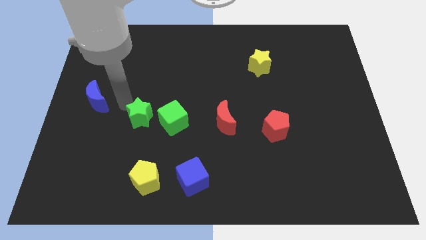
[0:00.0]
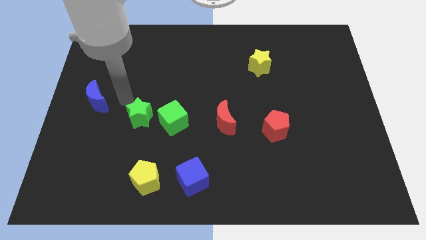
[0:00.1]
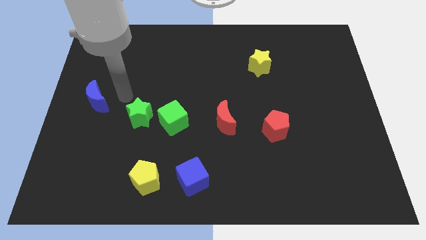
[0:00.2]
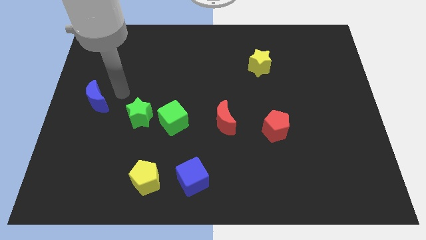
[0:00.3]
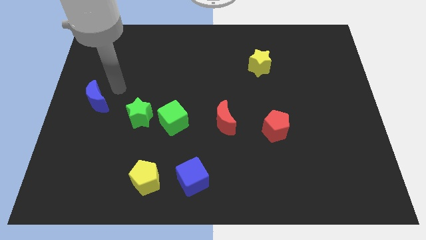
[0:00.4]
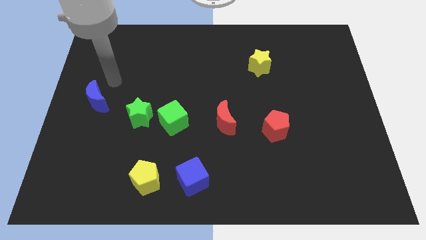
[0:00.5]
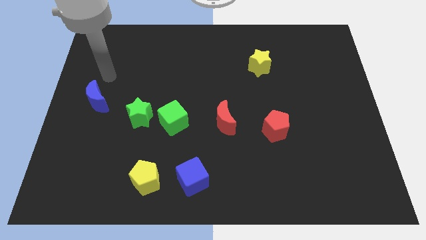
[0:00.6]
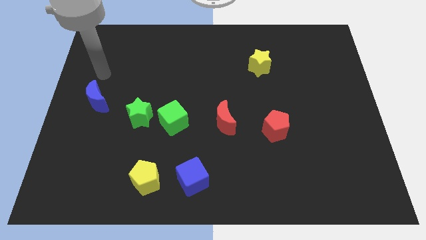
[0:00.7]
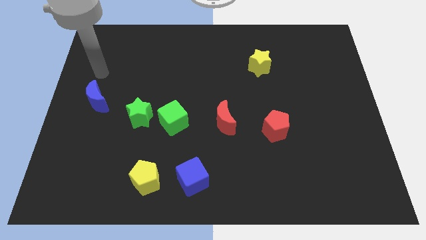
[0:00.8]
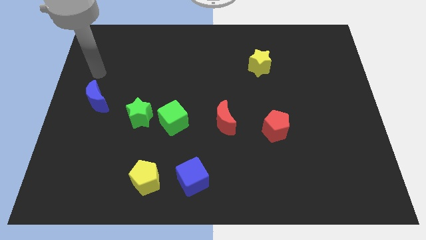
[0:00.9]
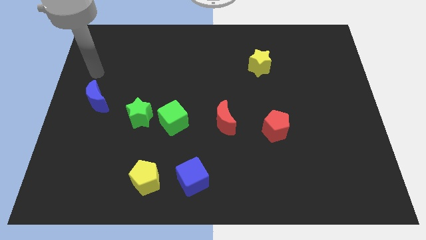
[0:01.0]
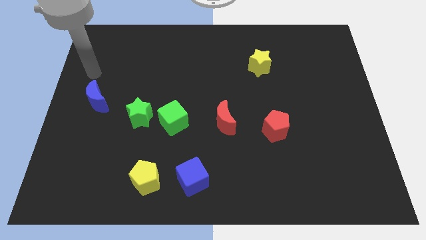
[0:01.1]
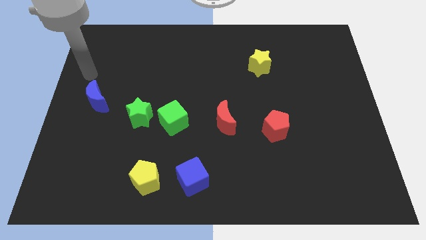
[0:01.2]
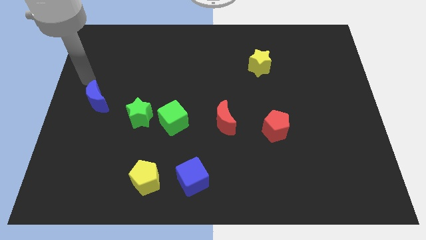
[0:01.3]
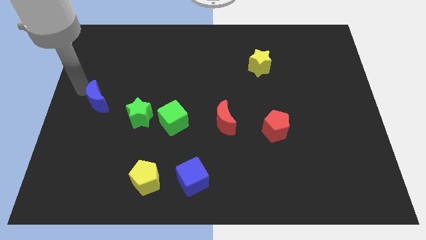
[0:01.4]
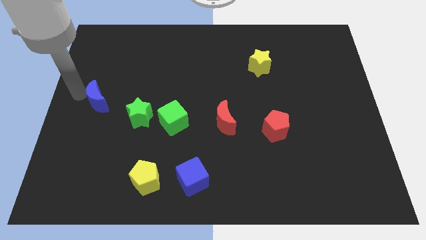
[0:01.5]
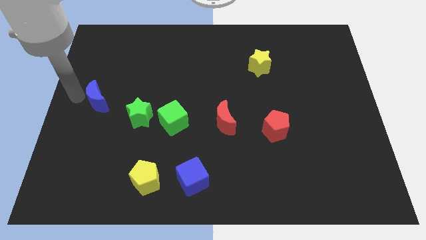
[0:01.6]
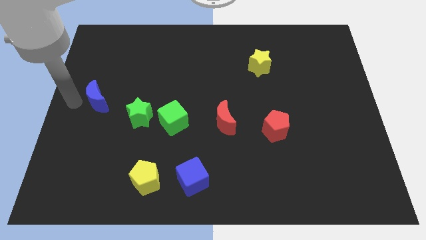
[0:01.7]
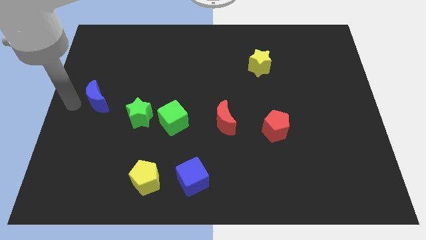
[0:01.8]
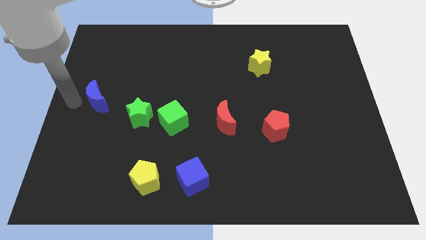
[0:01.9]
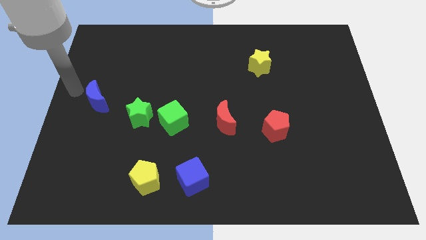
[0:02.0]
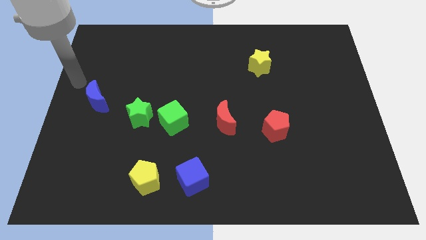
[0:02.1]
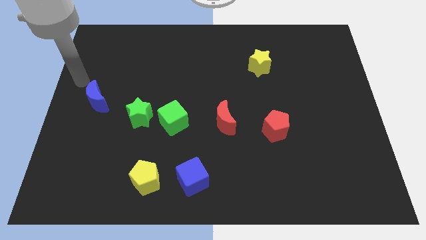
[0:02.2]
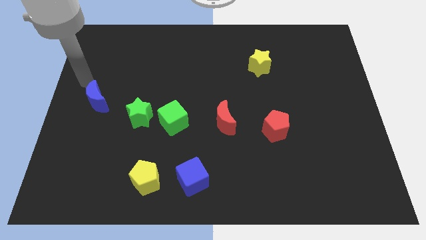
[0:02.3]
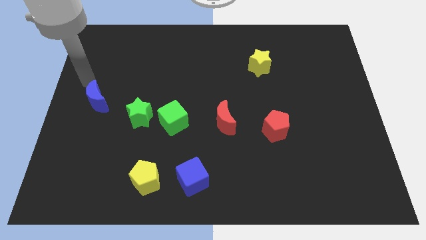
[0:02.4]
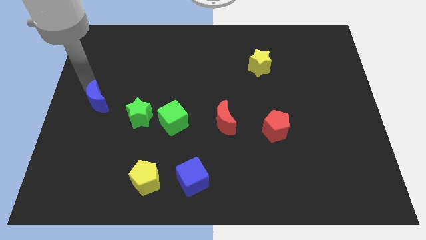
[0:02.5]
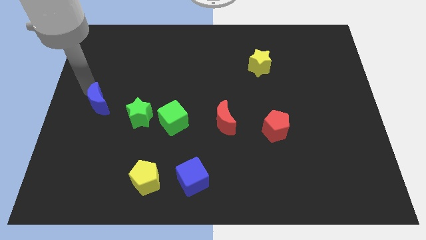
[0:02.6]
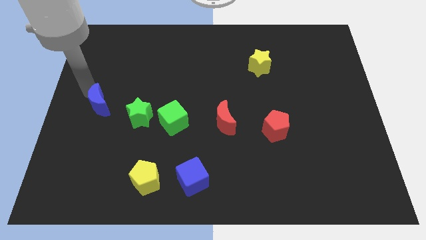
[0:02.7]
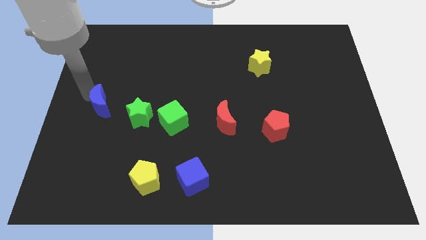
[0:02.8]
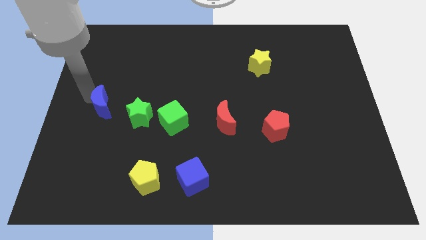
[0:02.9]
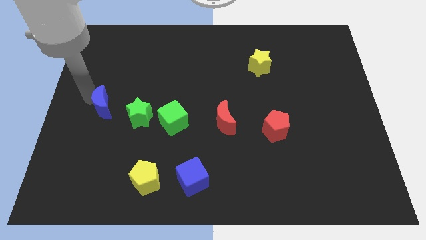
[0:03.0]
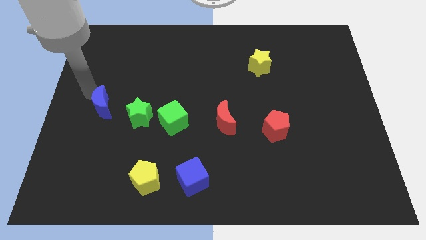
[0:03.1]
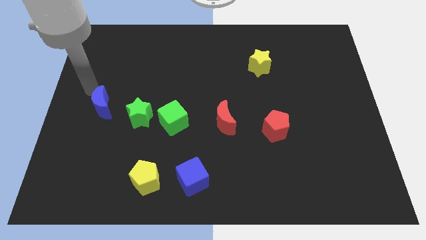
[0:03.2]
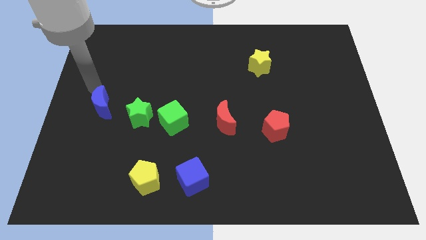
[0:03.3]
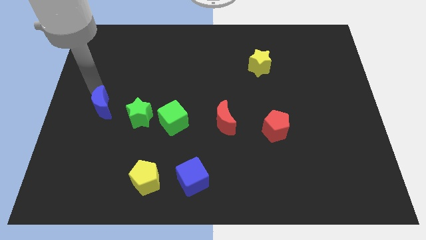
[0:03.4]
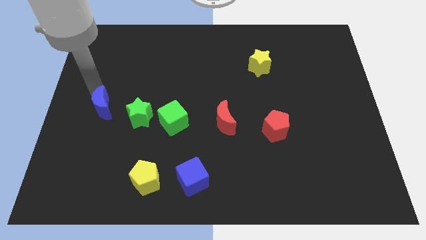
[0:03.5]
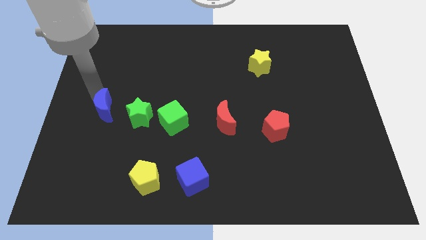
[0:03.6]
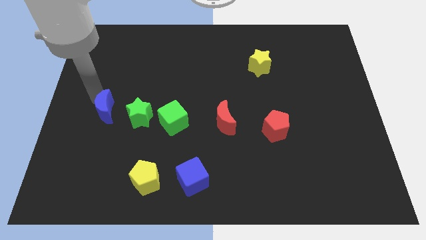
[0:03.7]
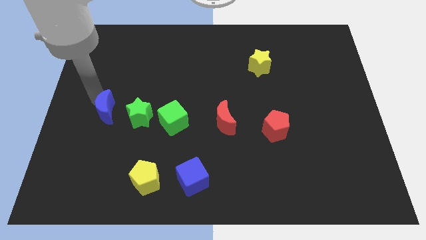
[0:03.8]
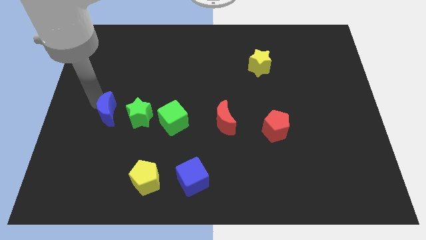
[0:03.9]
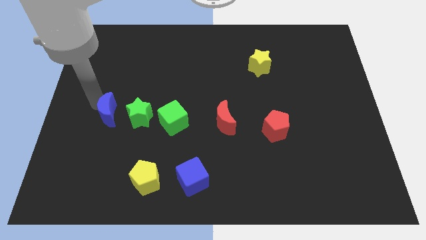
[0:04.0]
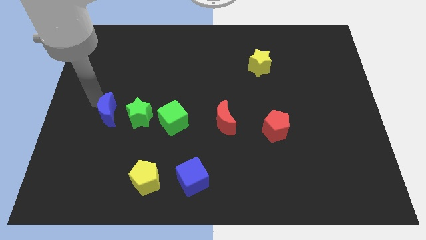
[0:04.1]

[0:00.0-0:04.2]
place blue cube parallel to green star

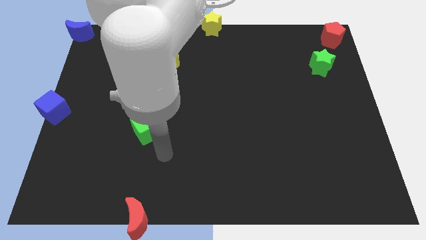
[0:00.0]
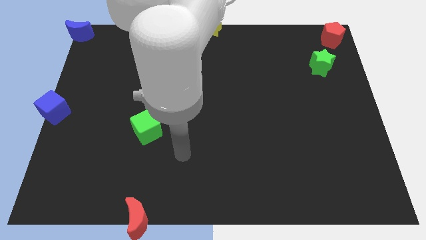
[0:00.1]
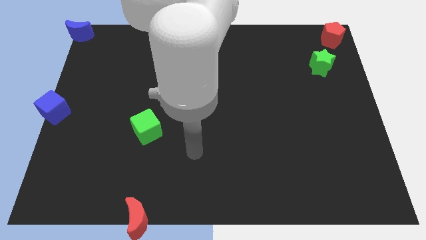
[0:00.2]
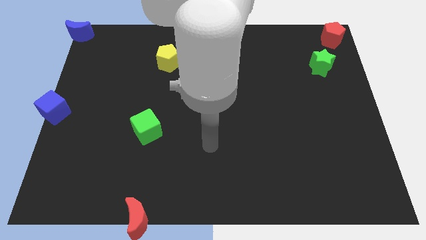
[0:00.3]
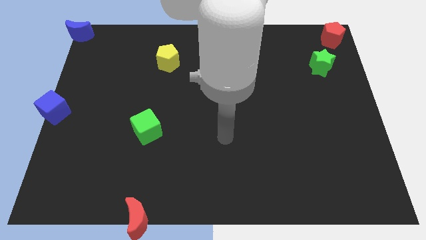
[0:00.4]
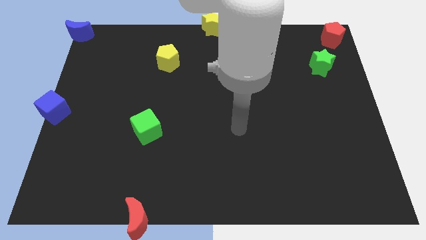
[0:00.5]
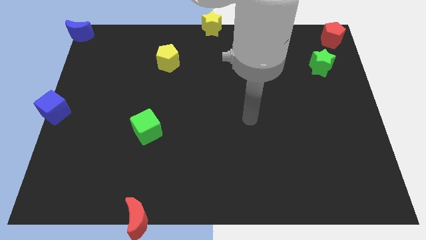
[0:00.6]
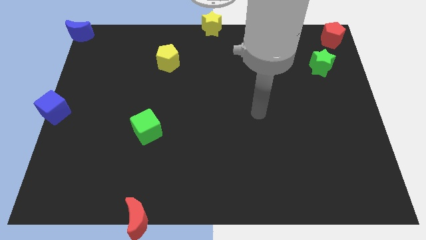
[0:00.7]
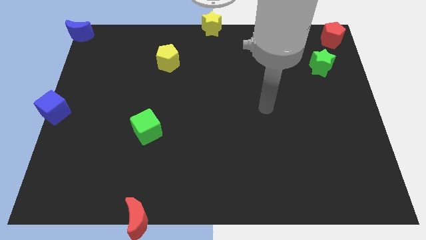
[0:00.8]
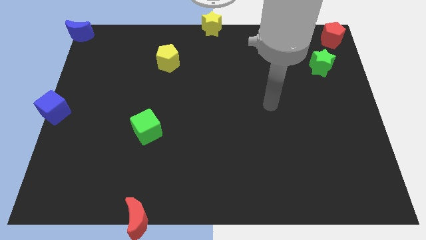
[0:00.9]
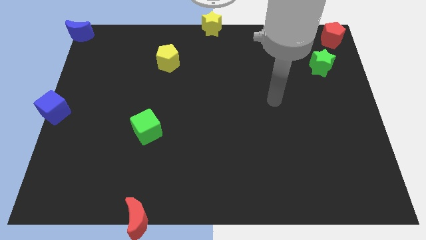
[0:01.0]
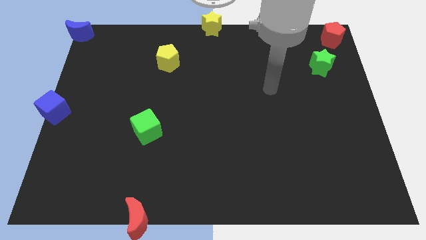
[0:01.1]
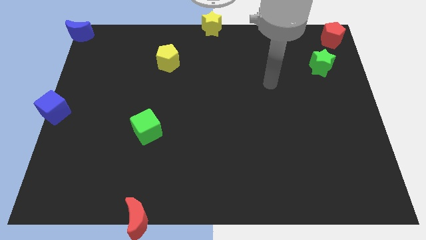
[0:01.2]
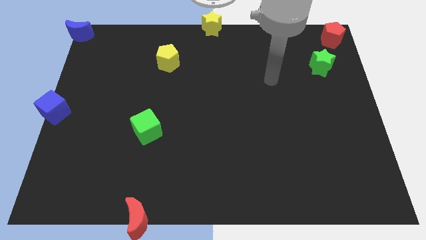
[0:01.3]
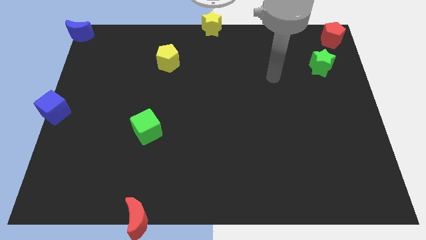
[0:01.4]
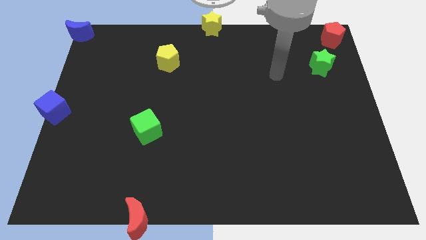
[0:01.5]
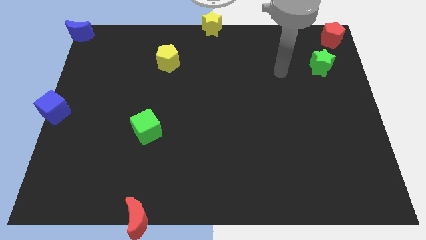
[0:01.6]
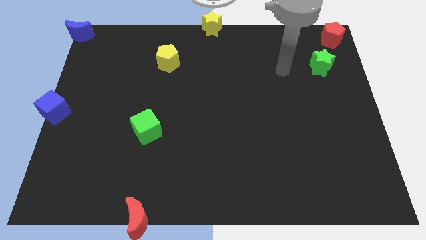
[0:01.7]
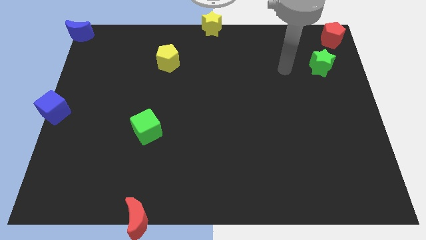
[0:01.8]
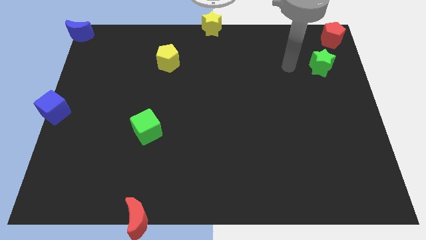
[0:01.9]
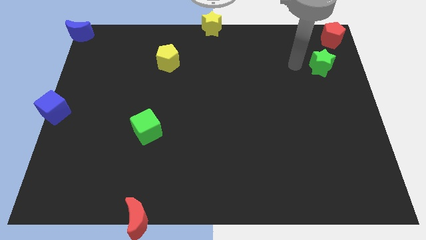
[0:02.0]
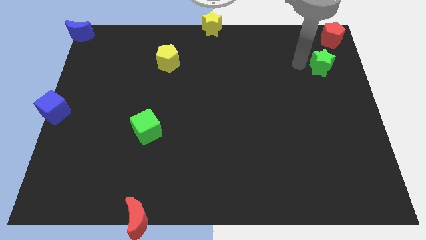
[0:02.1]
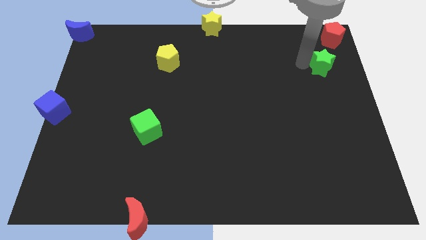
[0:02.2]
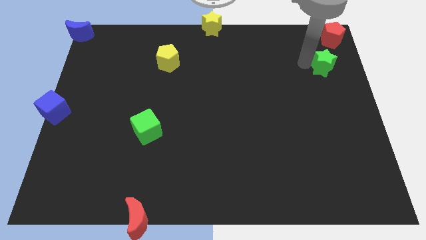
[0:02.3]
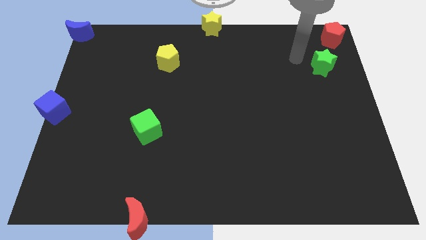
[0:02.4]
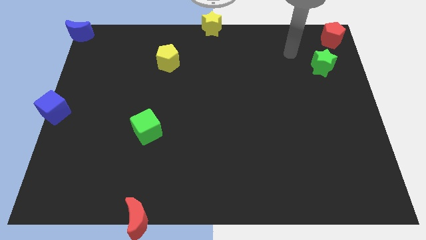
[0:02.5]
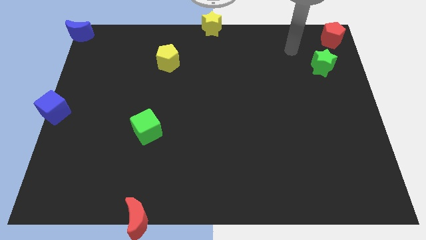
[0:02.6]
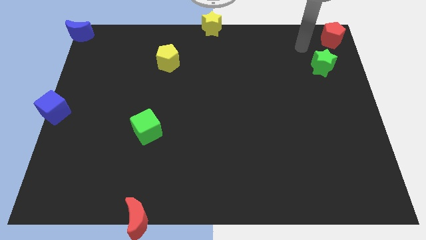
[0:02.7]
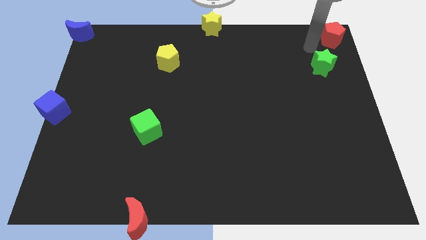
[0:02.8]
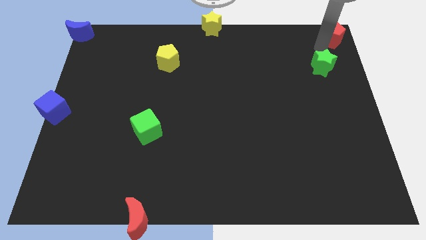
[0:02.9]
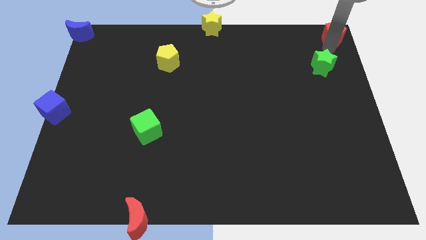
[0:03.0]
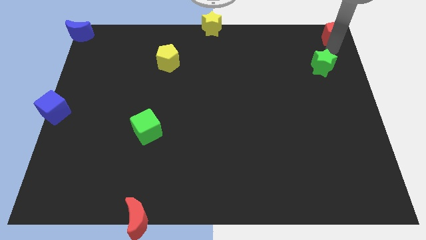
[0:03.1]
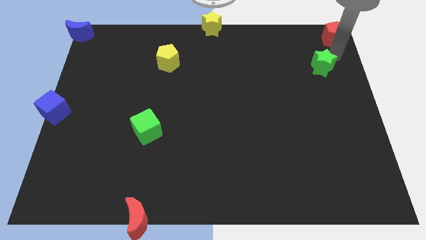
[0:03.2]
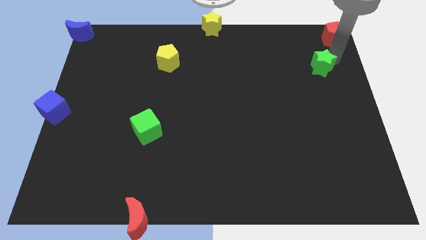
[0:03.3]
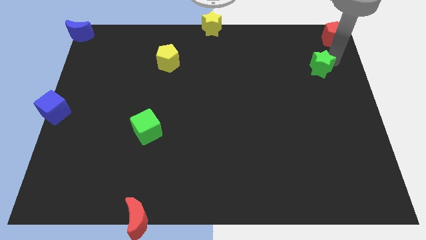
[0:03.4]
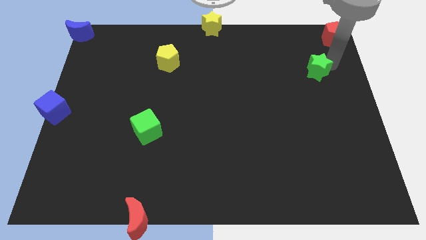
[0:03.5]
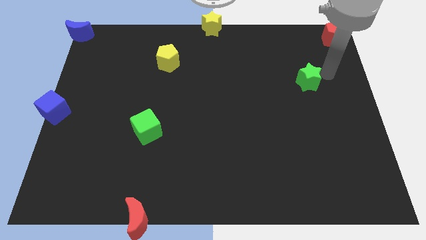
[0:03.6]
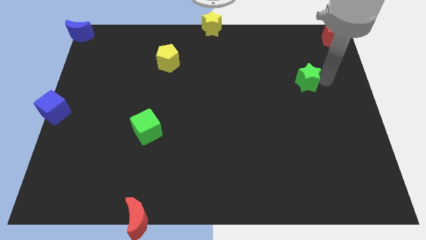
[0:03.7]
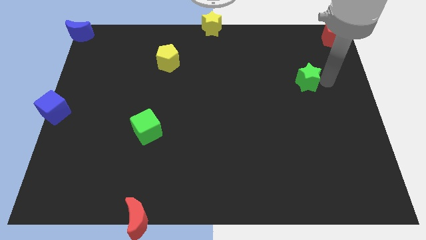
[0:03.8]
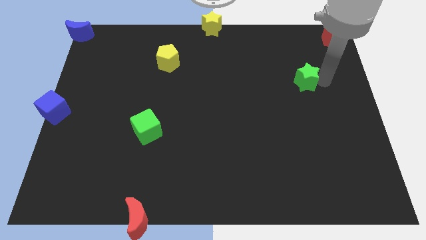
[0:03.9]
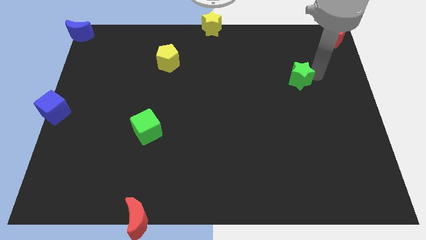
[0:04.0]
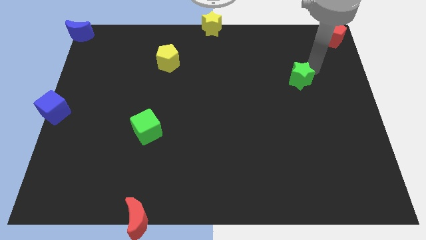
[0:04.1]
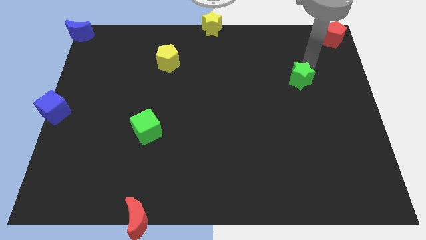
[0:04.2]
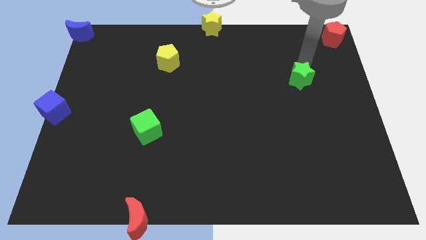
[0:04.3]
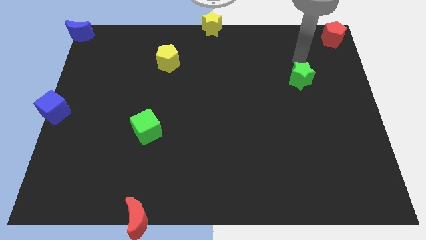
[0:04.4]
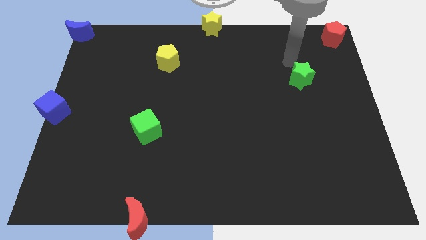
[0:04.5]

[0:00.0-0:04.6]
push the green star diagonally on the bottom right side of the yellow star
